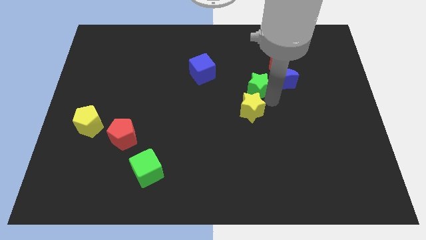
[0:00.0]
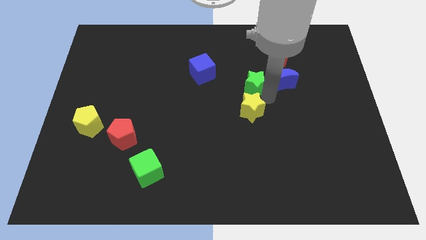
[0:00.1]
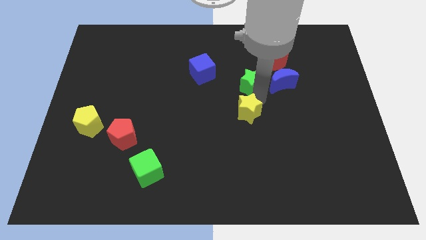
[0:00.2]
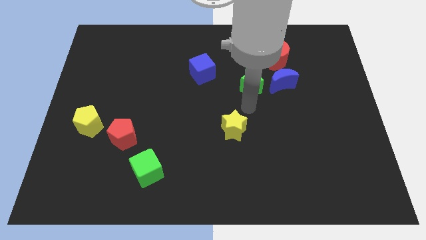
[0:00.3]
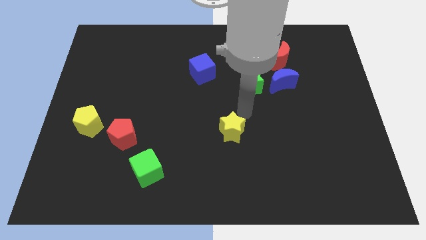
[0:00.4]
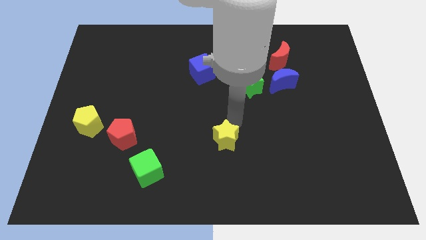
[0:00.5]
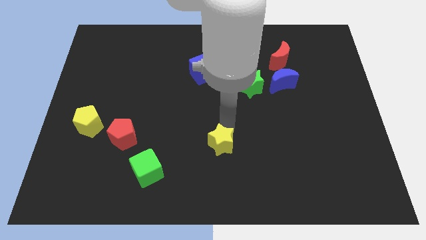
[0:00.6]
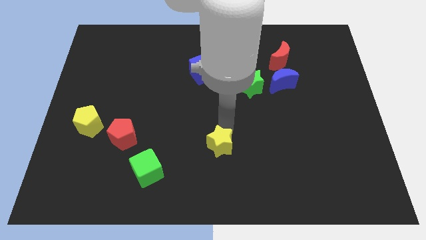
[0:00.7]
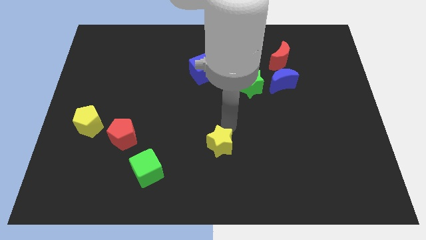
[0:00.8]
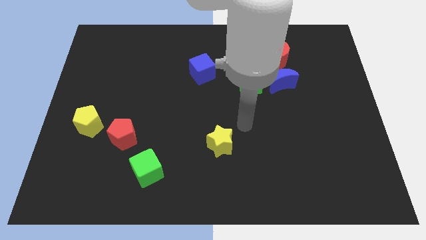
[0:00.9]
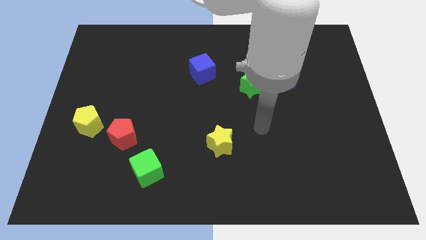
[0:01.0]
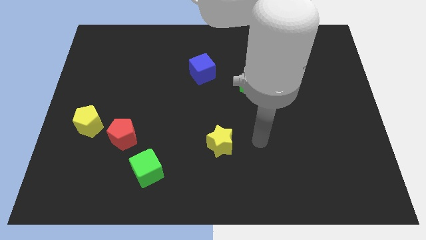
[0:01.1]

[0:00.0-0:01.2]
separate yellow star from green star

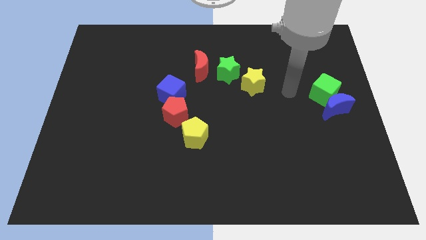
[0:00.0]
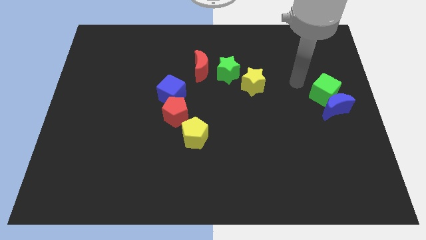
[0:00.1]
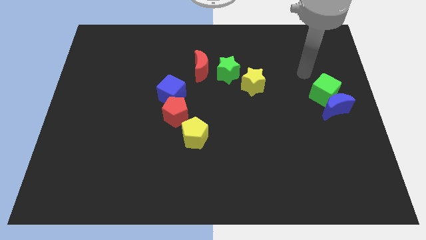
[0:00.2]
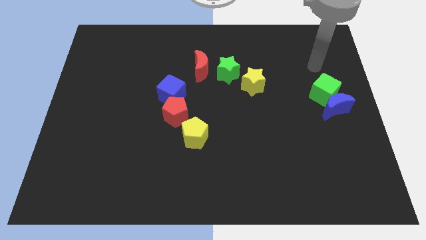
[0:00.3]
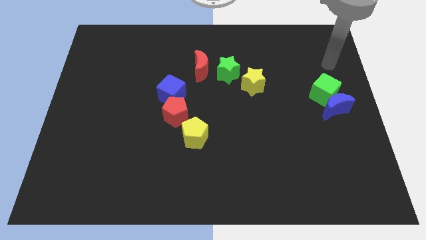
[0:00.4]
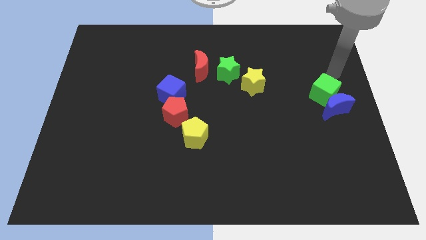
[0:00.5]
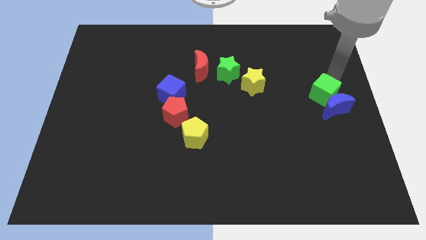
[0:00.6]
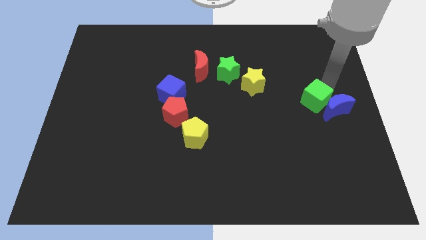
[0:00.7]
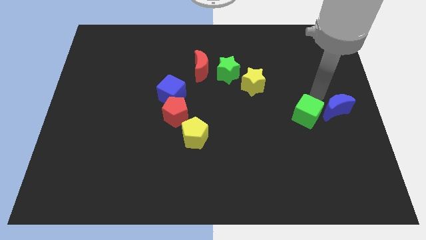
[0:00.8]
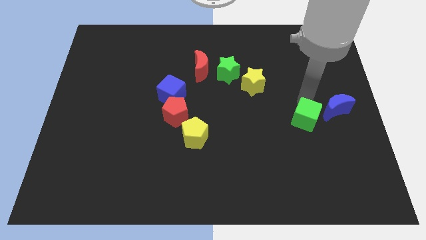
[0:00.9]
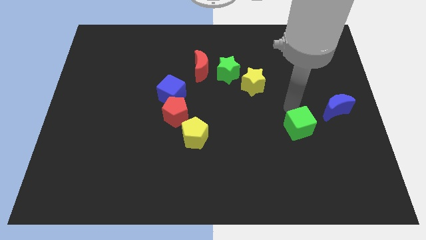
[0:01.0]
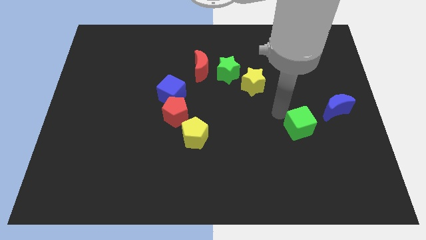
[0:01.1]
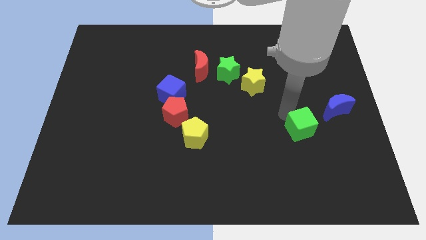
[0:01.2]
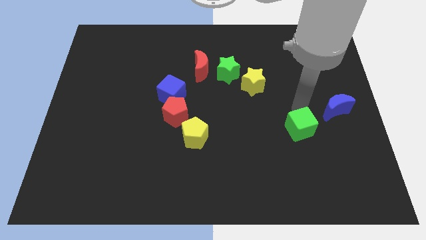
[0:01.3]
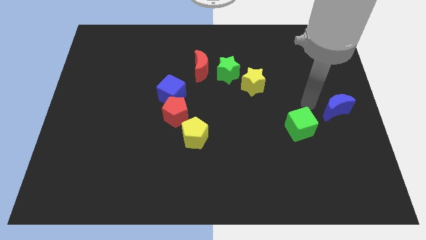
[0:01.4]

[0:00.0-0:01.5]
separate the green cube from the blue moon

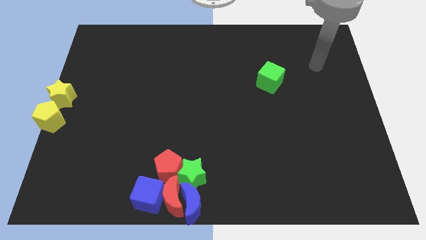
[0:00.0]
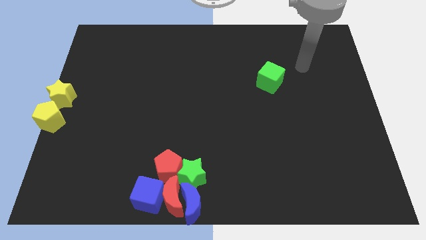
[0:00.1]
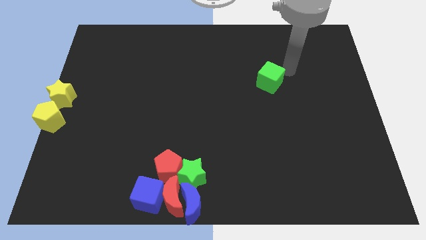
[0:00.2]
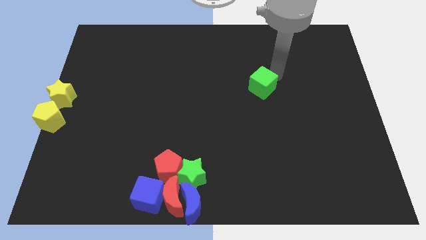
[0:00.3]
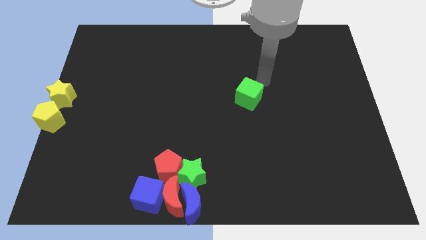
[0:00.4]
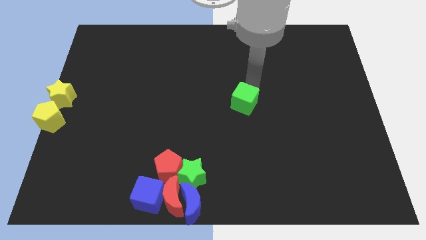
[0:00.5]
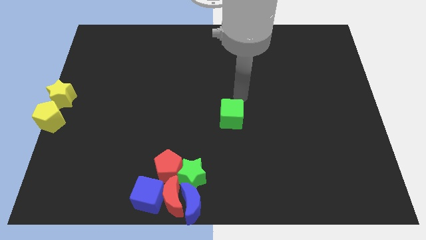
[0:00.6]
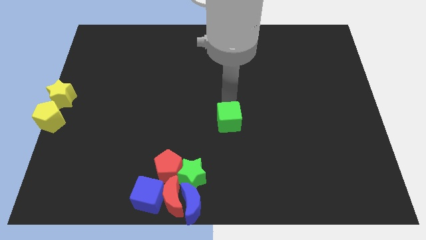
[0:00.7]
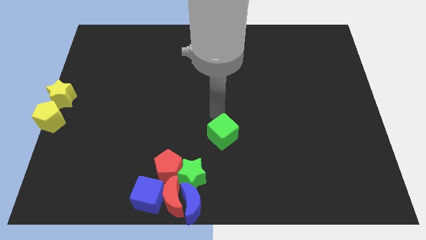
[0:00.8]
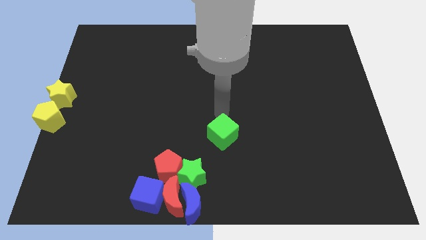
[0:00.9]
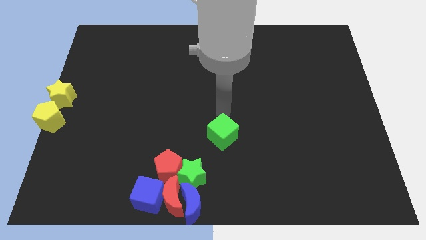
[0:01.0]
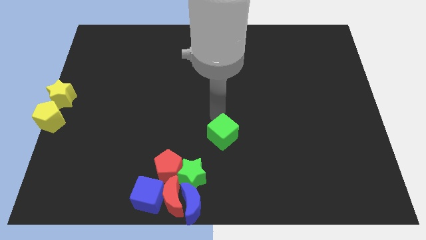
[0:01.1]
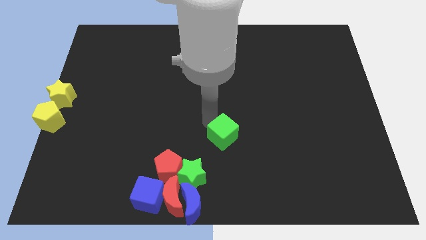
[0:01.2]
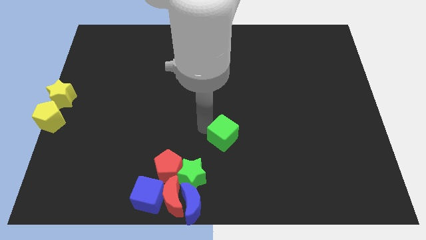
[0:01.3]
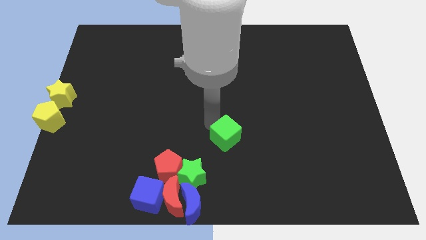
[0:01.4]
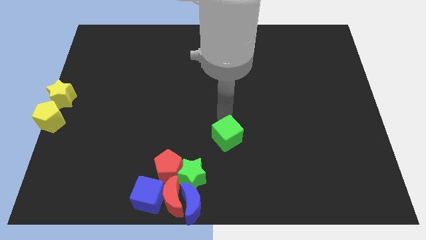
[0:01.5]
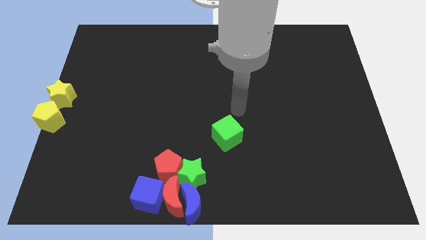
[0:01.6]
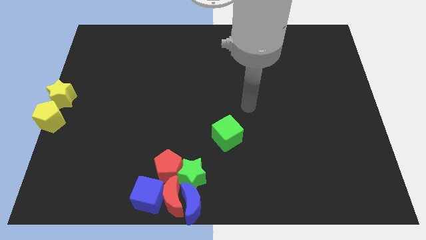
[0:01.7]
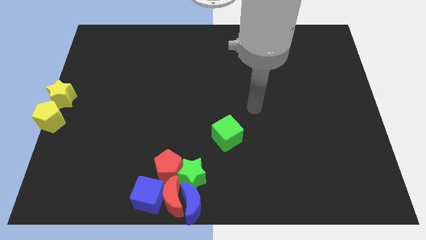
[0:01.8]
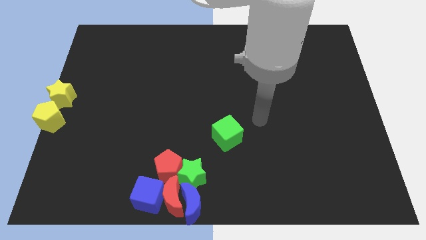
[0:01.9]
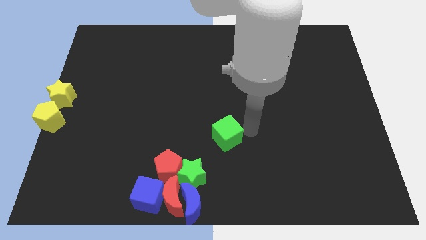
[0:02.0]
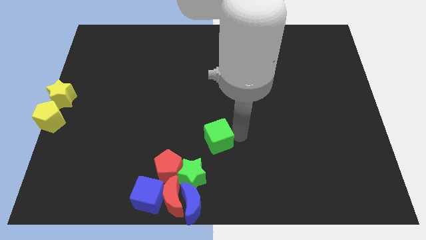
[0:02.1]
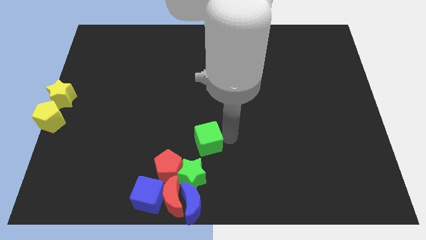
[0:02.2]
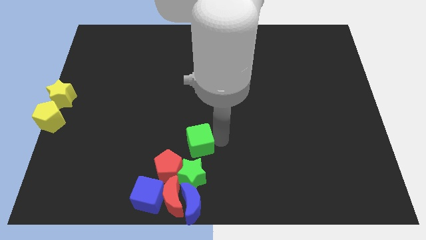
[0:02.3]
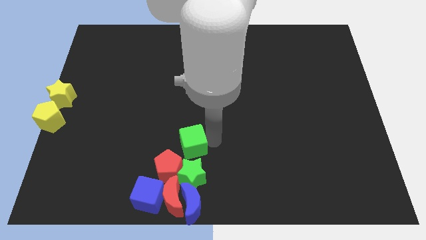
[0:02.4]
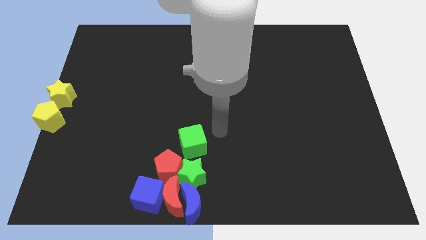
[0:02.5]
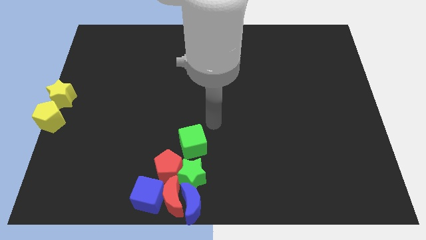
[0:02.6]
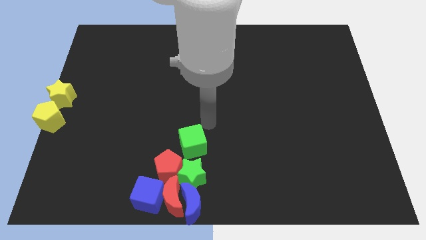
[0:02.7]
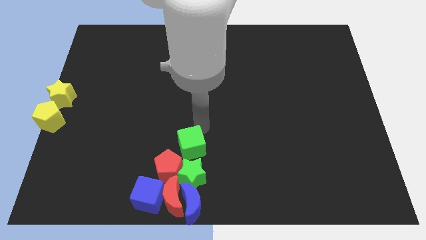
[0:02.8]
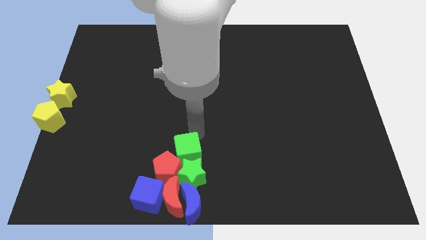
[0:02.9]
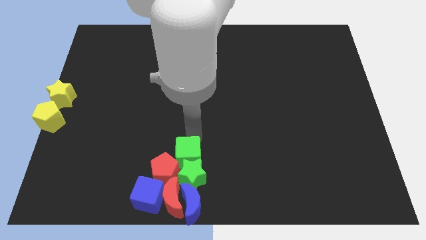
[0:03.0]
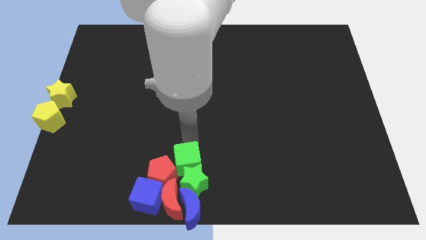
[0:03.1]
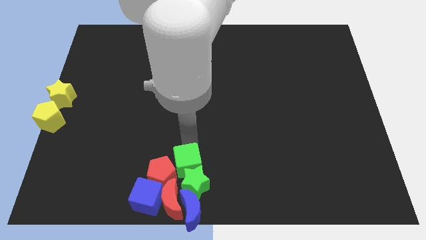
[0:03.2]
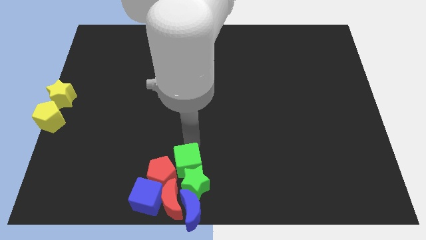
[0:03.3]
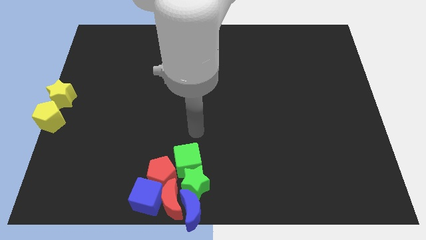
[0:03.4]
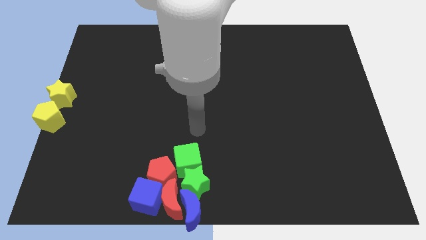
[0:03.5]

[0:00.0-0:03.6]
push the green cube into the group of blocks

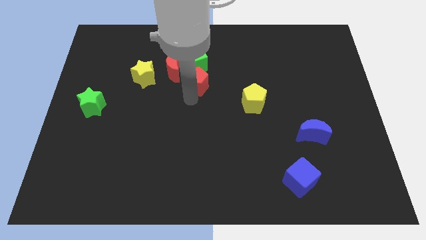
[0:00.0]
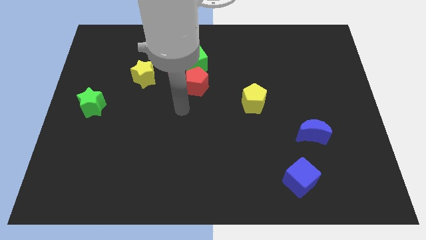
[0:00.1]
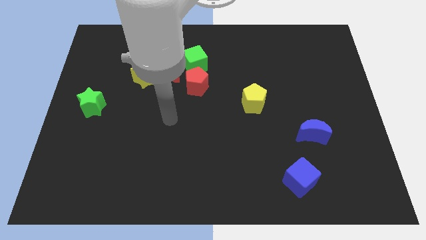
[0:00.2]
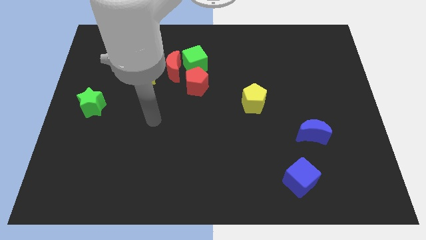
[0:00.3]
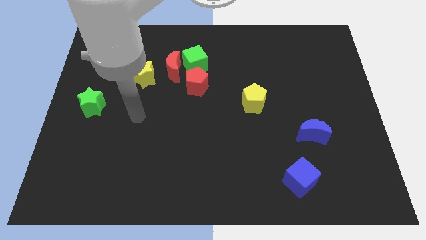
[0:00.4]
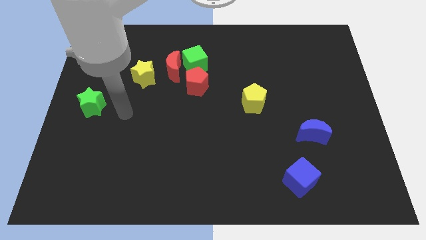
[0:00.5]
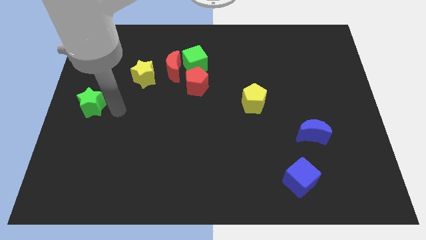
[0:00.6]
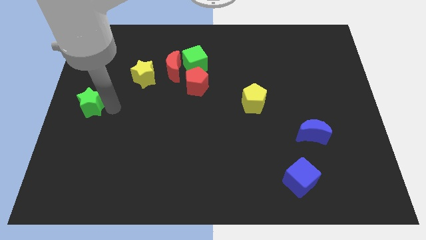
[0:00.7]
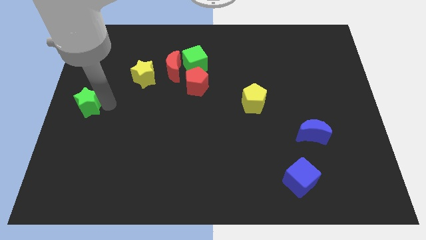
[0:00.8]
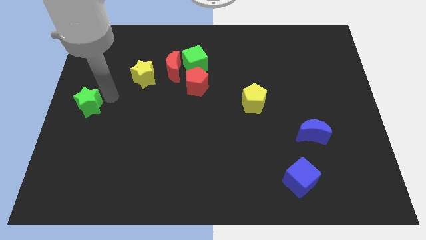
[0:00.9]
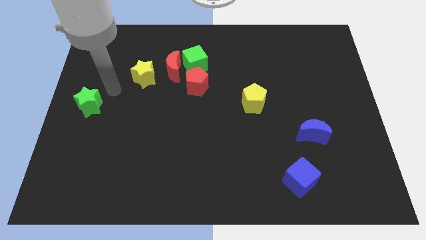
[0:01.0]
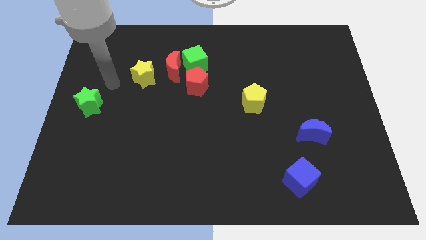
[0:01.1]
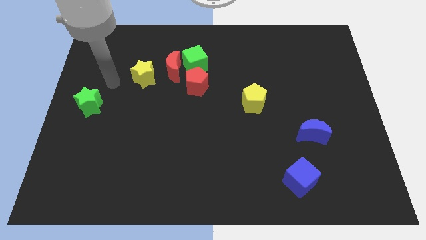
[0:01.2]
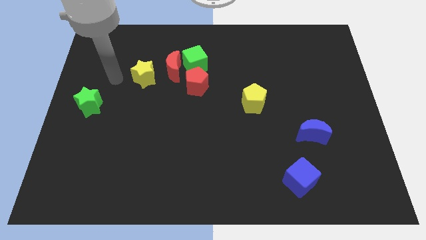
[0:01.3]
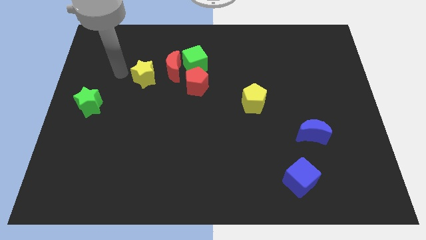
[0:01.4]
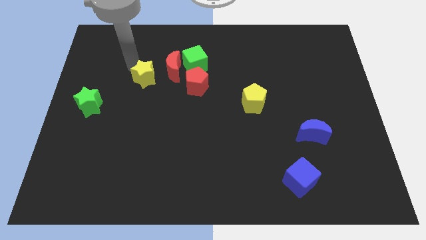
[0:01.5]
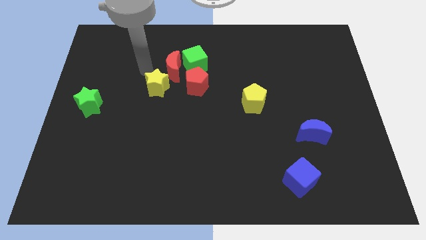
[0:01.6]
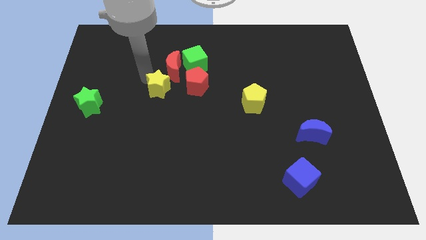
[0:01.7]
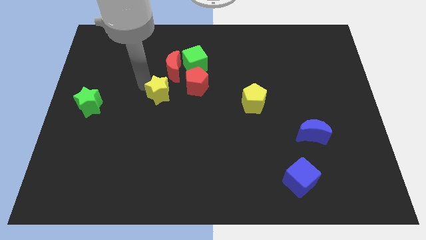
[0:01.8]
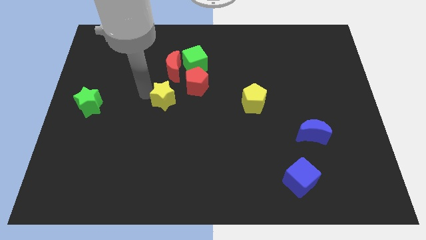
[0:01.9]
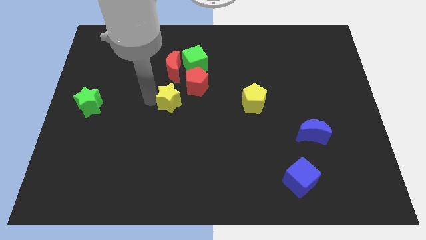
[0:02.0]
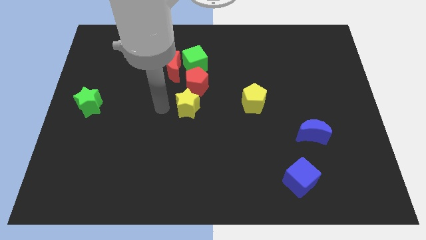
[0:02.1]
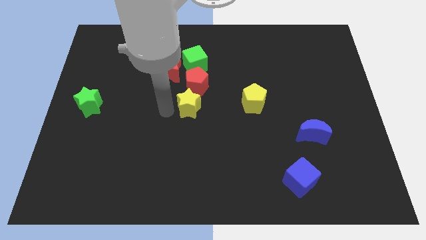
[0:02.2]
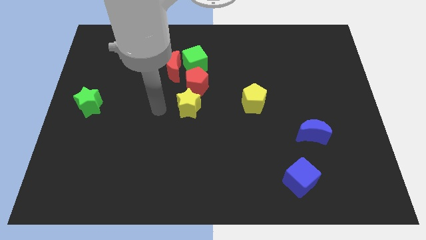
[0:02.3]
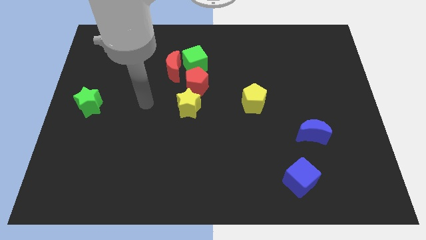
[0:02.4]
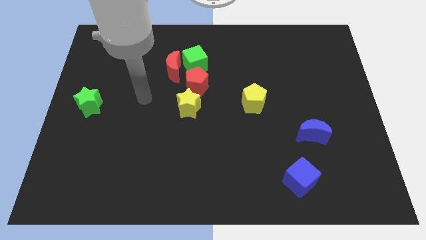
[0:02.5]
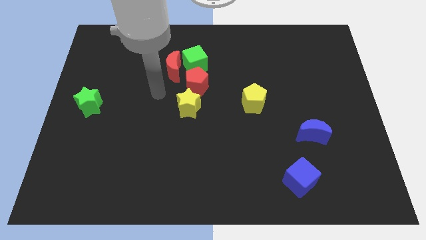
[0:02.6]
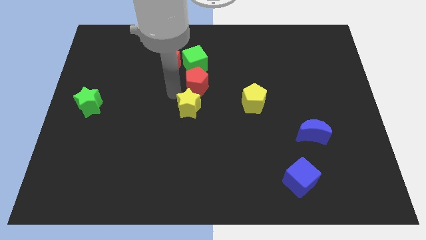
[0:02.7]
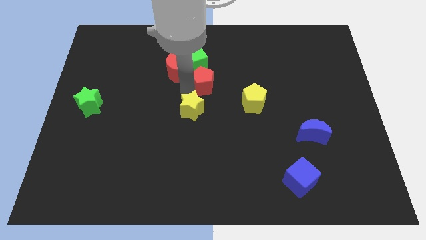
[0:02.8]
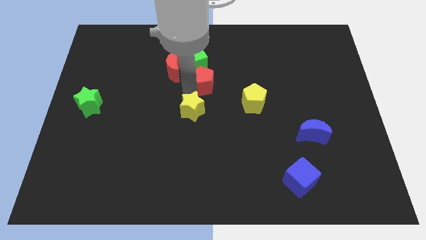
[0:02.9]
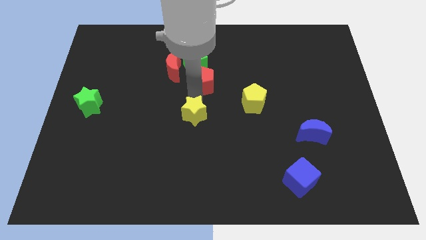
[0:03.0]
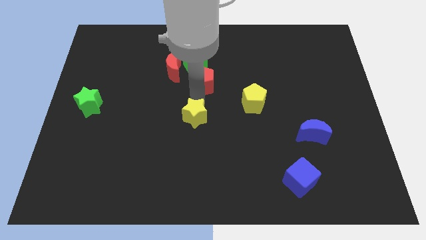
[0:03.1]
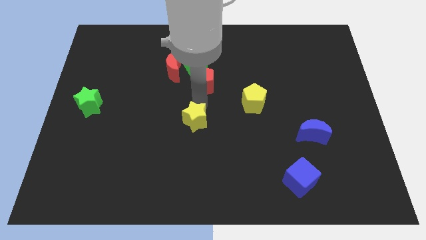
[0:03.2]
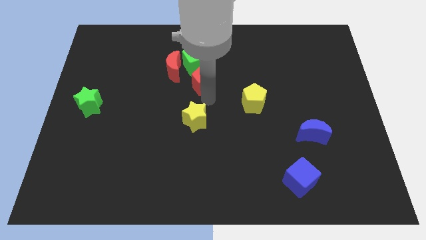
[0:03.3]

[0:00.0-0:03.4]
place yellow star to the center of the board
